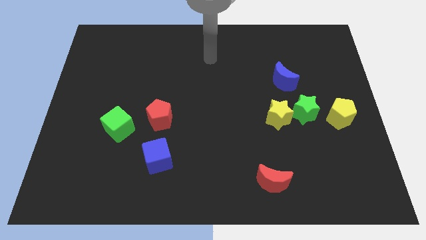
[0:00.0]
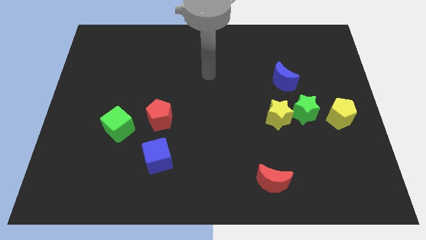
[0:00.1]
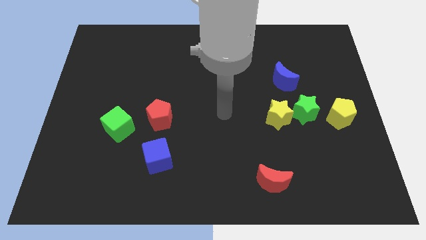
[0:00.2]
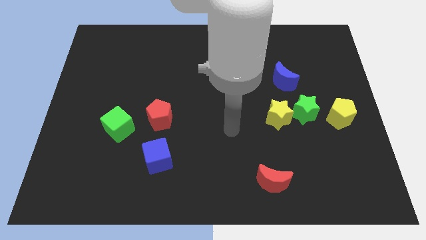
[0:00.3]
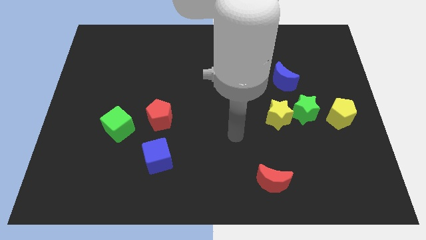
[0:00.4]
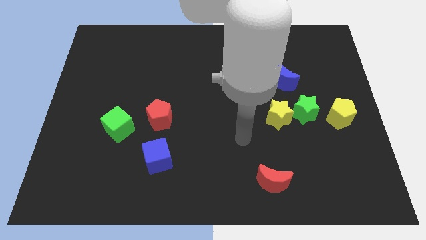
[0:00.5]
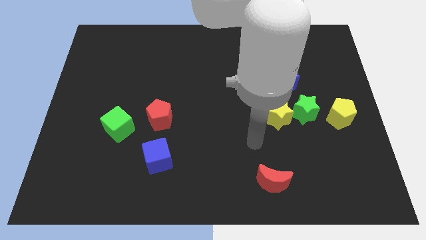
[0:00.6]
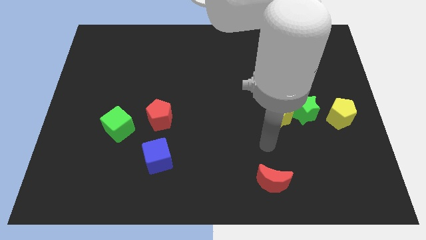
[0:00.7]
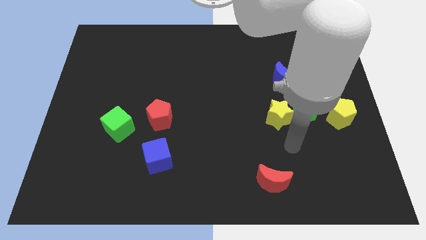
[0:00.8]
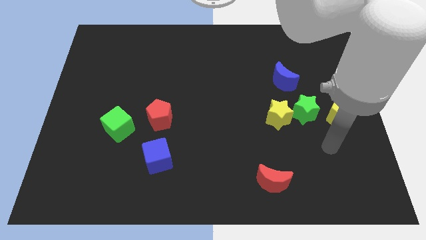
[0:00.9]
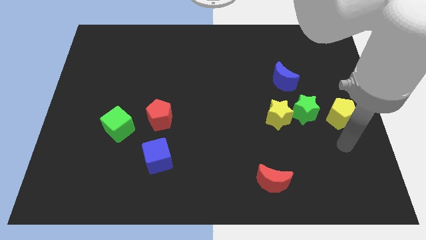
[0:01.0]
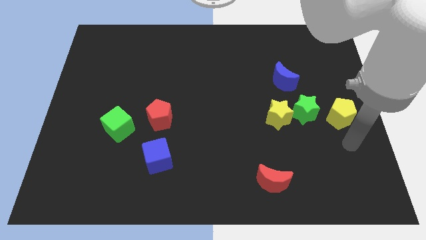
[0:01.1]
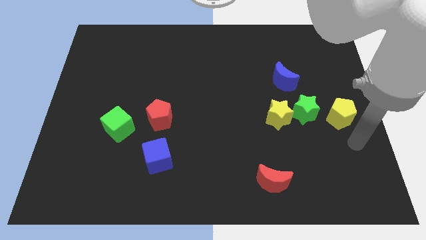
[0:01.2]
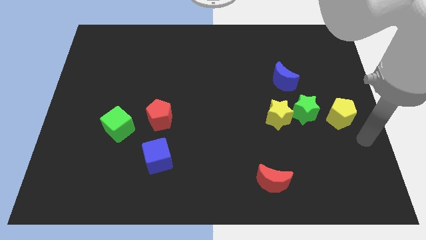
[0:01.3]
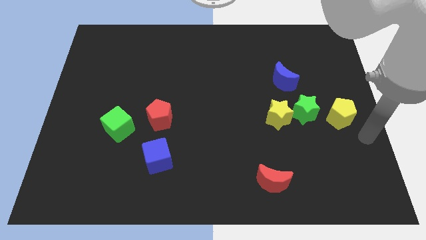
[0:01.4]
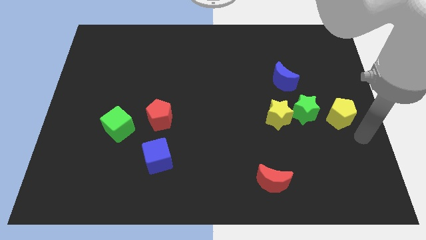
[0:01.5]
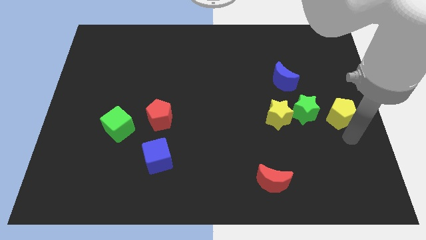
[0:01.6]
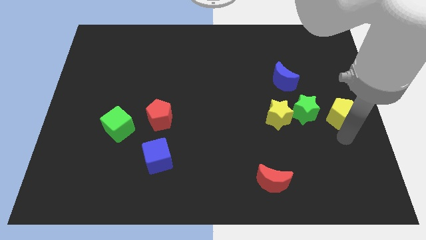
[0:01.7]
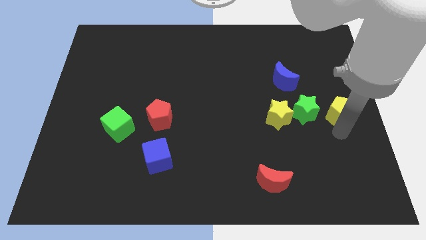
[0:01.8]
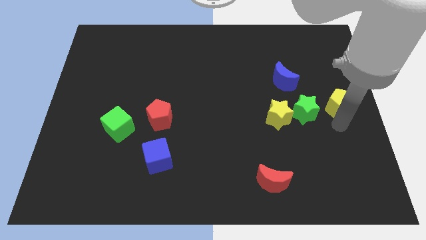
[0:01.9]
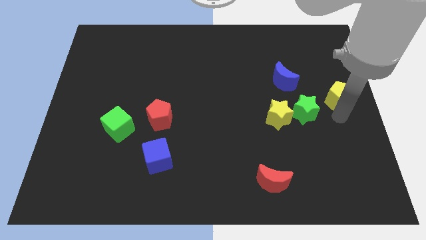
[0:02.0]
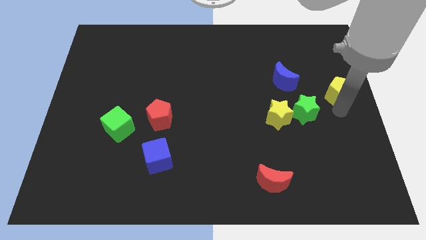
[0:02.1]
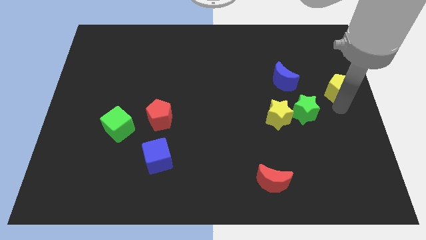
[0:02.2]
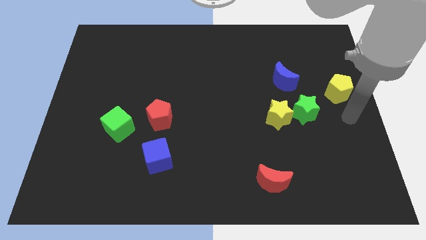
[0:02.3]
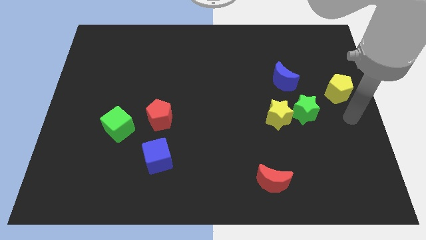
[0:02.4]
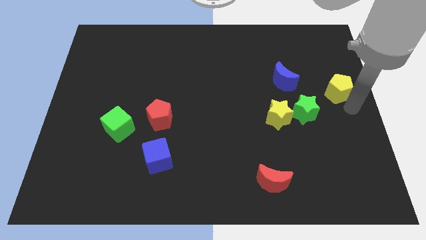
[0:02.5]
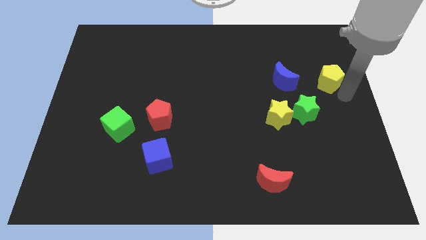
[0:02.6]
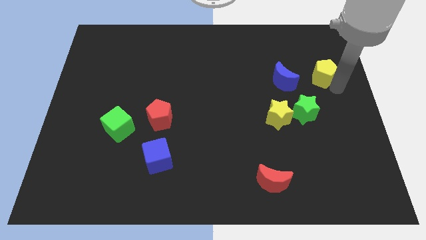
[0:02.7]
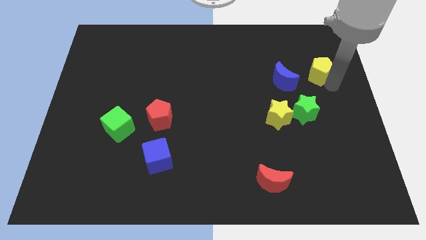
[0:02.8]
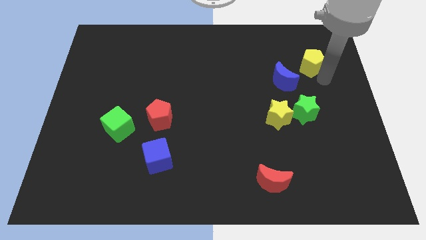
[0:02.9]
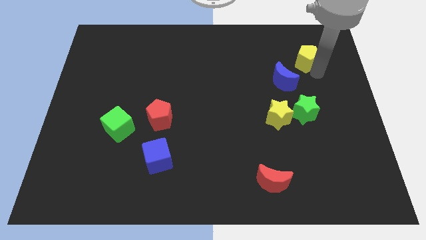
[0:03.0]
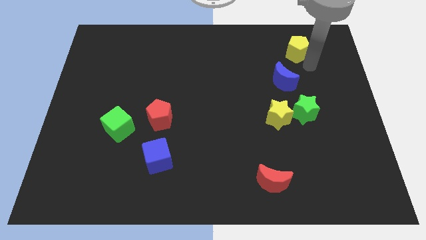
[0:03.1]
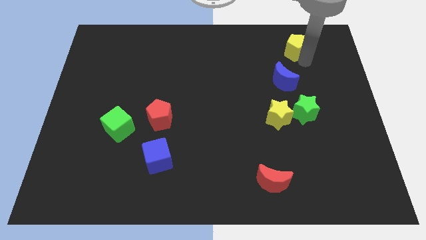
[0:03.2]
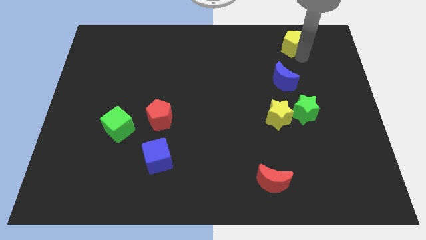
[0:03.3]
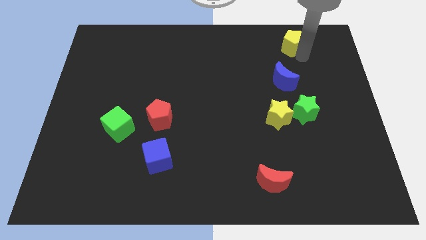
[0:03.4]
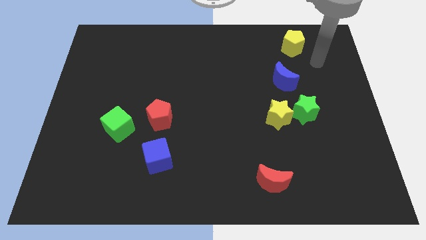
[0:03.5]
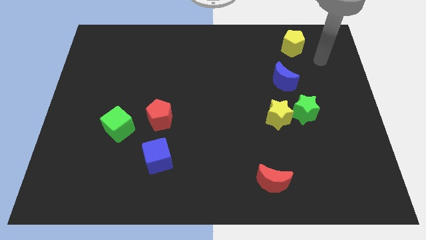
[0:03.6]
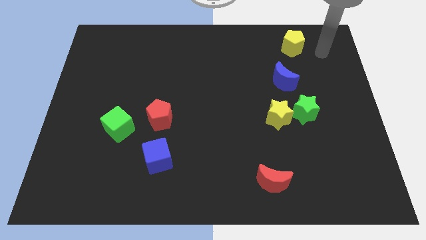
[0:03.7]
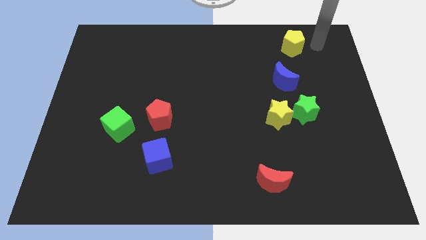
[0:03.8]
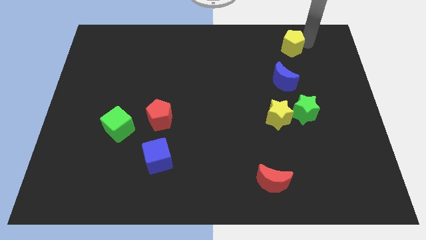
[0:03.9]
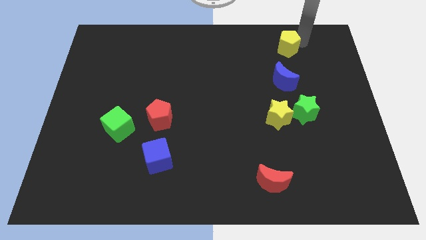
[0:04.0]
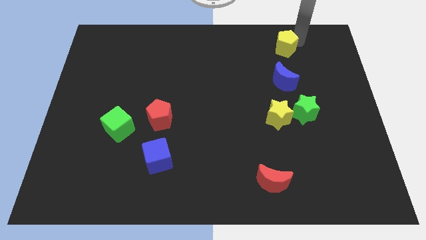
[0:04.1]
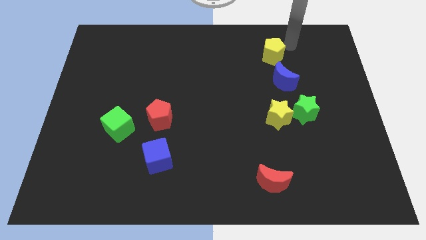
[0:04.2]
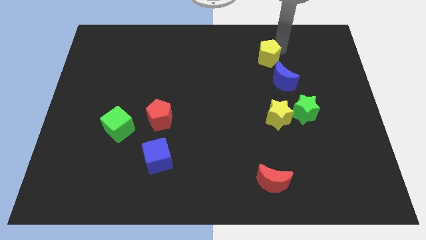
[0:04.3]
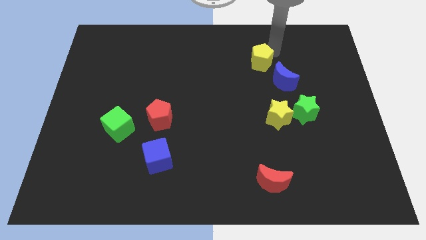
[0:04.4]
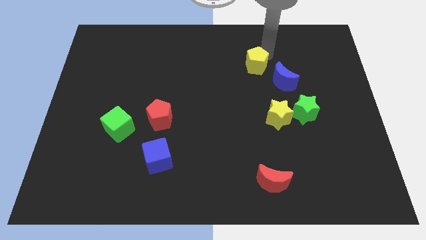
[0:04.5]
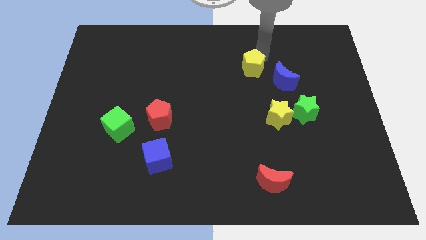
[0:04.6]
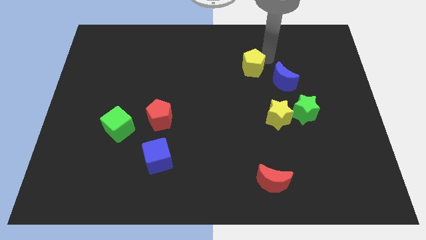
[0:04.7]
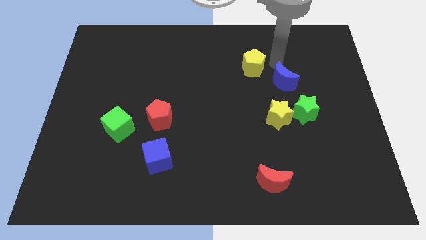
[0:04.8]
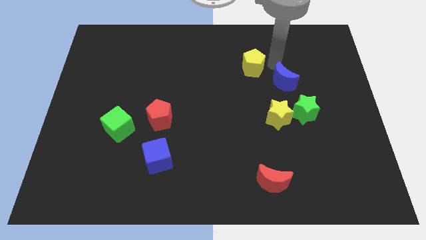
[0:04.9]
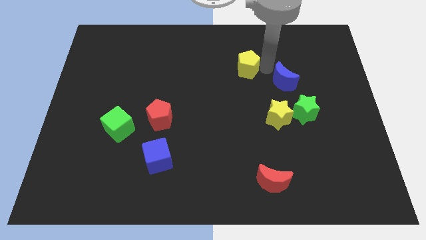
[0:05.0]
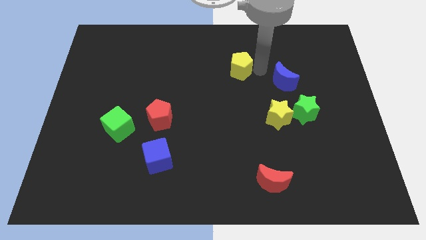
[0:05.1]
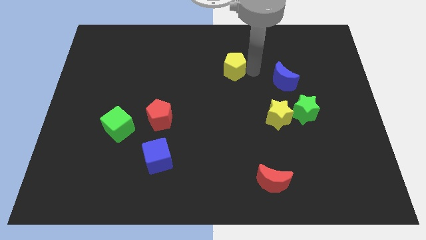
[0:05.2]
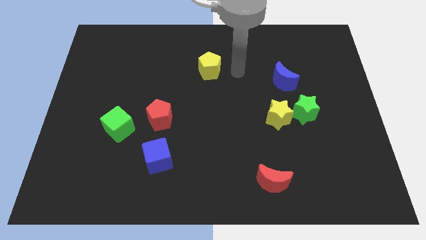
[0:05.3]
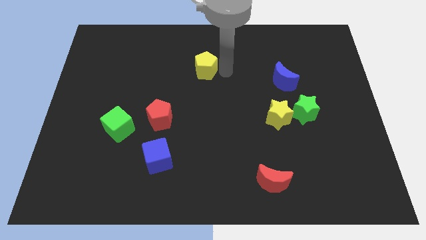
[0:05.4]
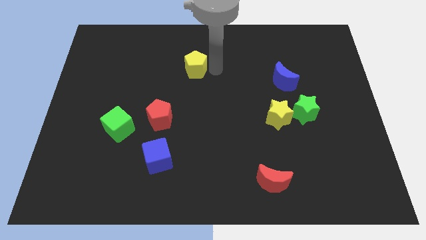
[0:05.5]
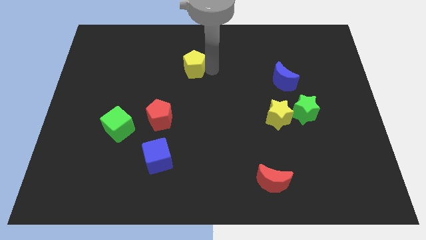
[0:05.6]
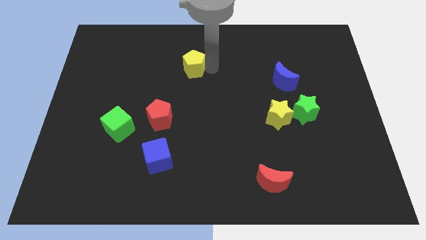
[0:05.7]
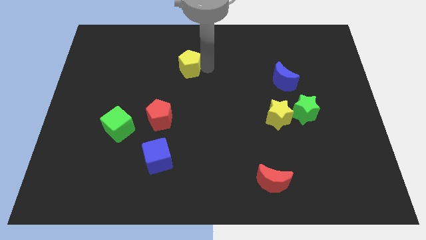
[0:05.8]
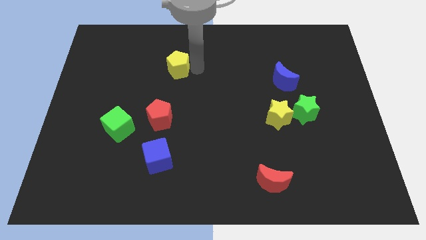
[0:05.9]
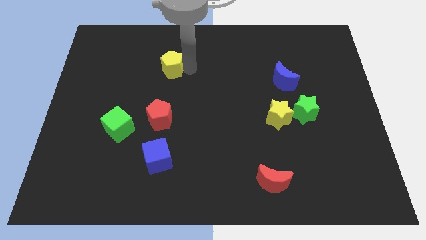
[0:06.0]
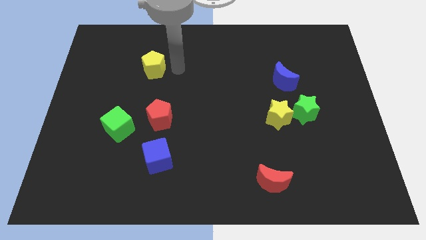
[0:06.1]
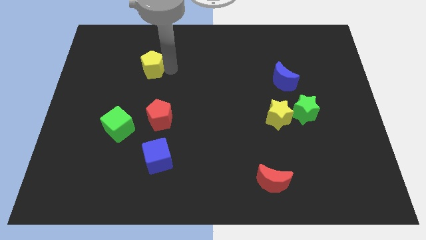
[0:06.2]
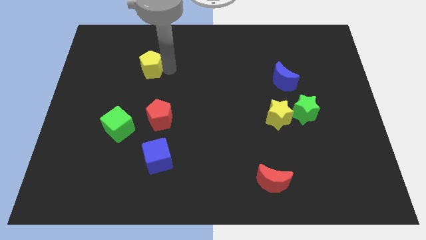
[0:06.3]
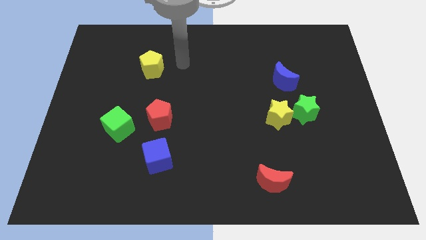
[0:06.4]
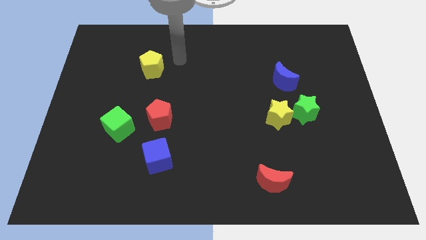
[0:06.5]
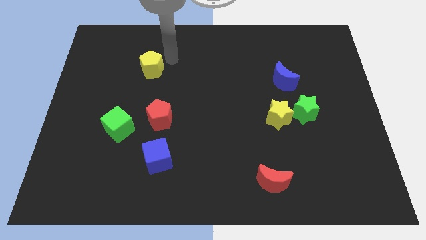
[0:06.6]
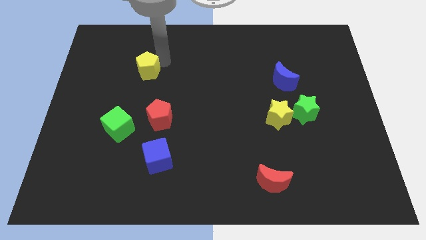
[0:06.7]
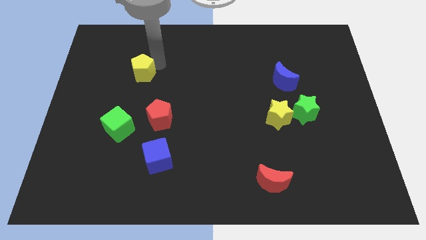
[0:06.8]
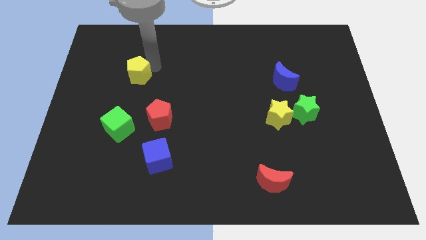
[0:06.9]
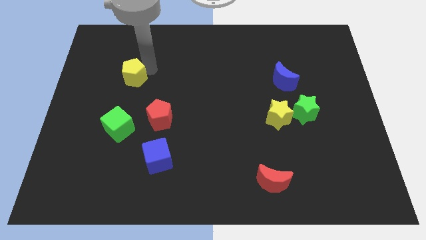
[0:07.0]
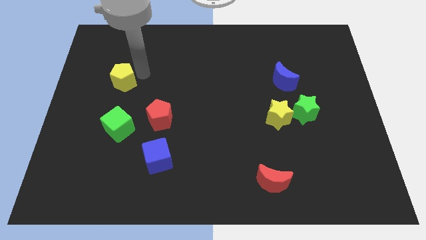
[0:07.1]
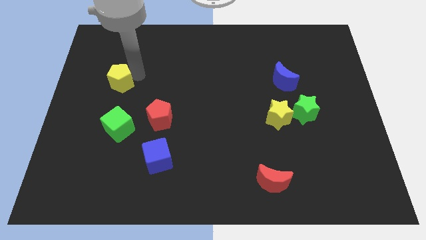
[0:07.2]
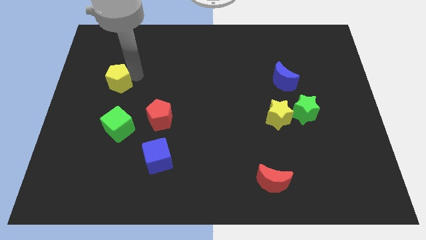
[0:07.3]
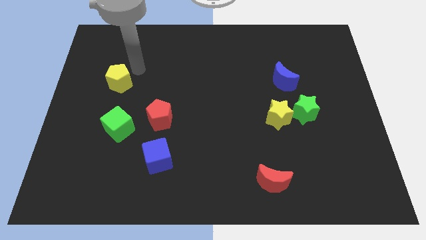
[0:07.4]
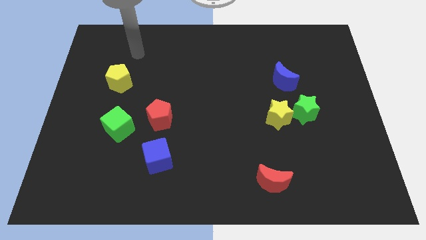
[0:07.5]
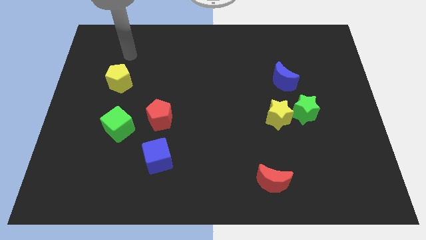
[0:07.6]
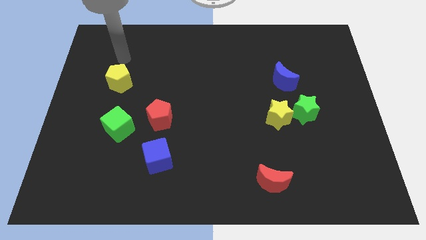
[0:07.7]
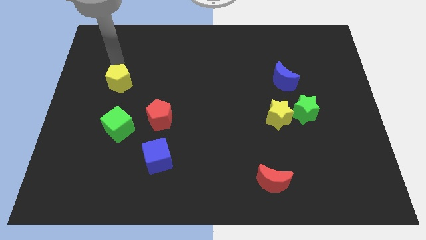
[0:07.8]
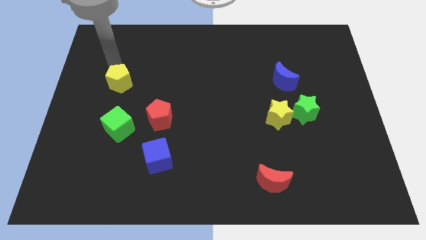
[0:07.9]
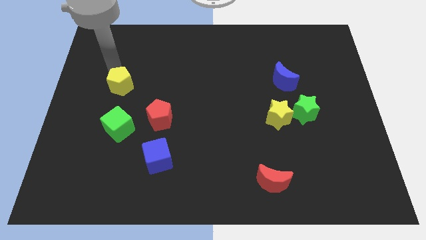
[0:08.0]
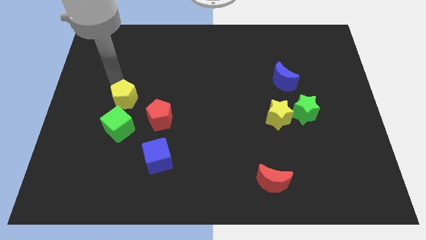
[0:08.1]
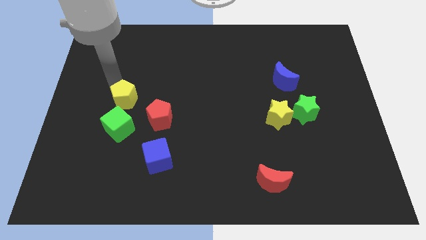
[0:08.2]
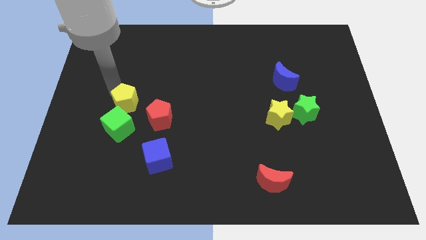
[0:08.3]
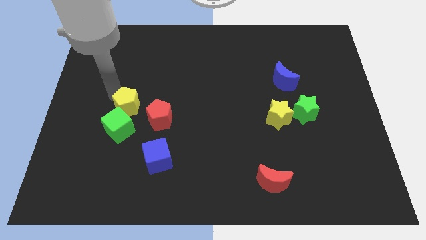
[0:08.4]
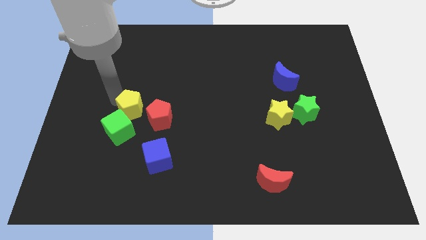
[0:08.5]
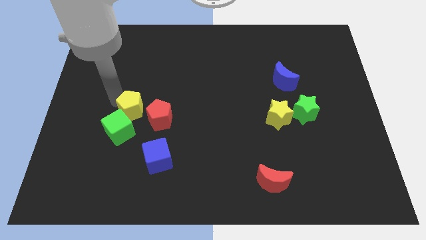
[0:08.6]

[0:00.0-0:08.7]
move the yellow pentagon next to the green cube
